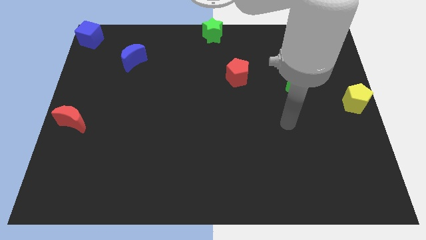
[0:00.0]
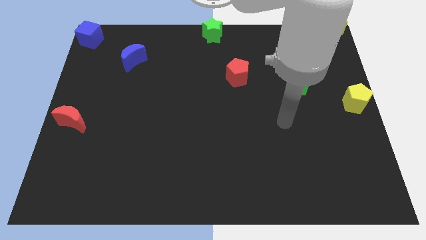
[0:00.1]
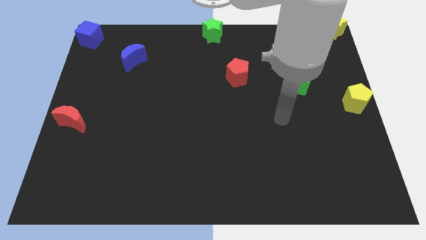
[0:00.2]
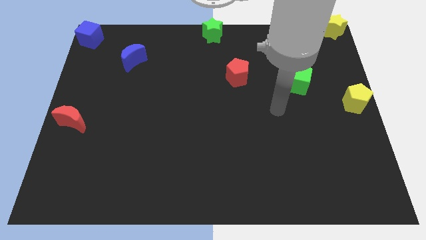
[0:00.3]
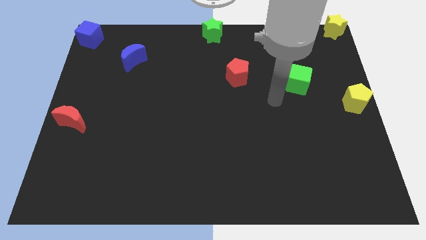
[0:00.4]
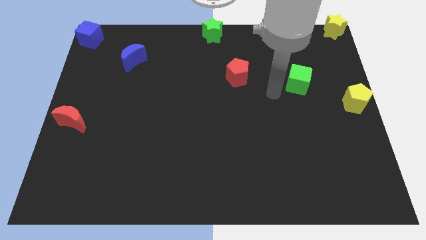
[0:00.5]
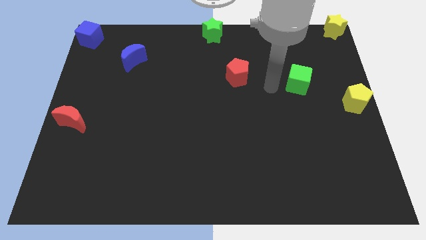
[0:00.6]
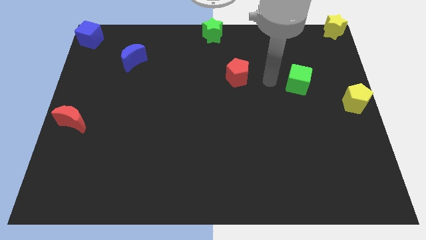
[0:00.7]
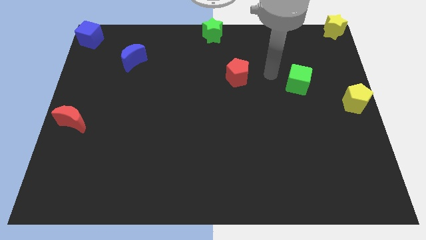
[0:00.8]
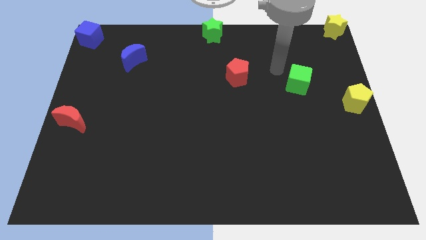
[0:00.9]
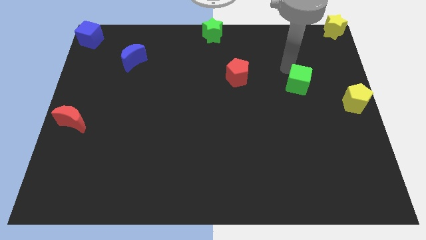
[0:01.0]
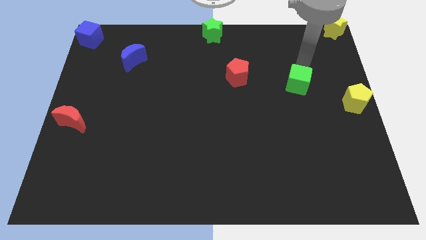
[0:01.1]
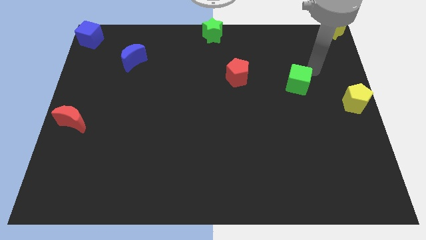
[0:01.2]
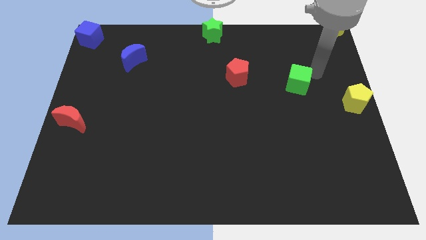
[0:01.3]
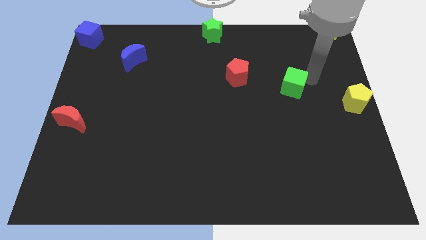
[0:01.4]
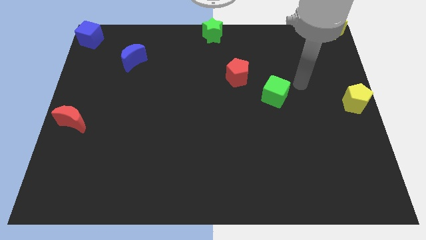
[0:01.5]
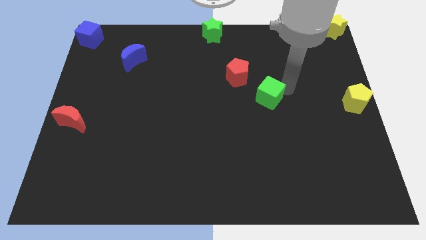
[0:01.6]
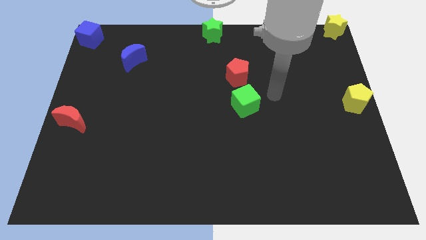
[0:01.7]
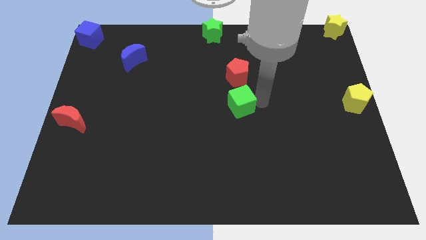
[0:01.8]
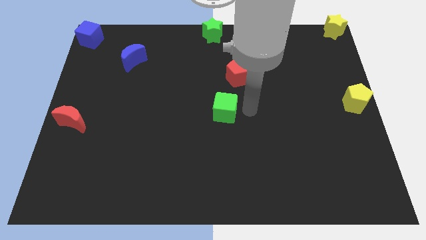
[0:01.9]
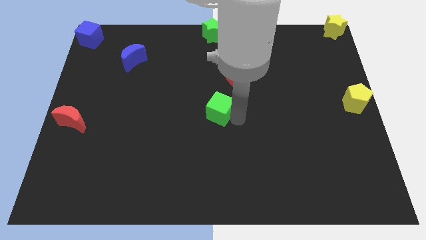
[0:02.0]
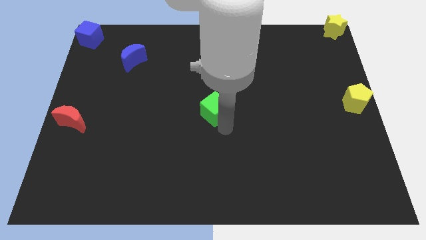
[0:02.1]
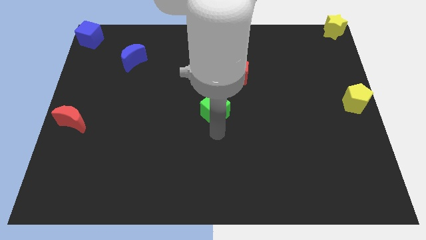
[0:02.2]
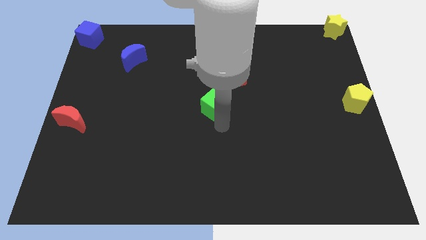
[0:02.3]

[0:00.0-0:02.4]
move the green star to the center of the board

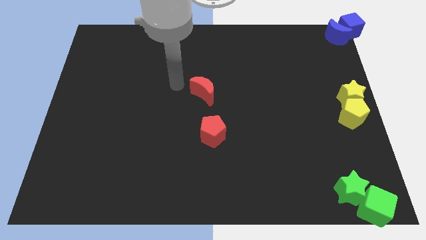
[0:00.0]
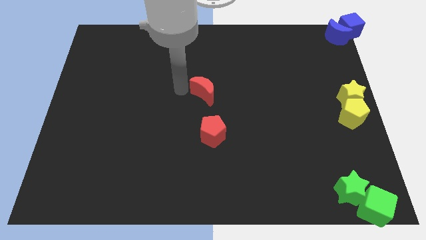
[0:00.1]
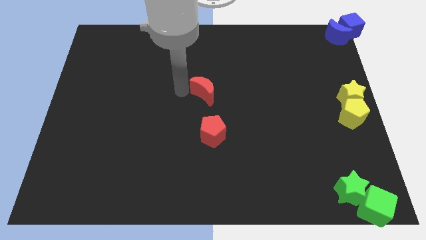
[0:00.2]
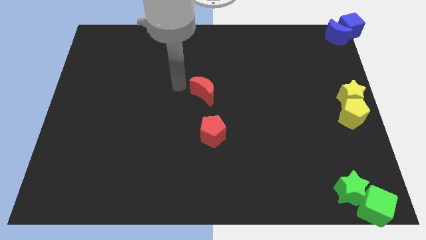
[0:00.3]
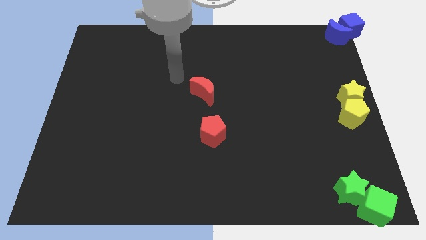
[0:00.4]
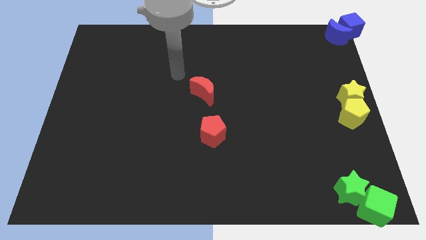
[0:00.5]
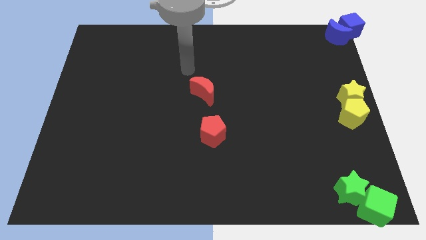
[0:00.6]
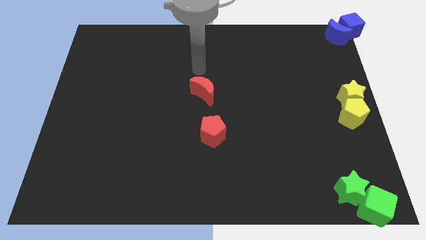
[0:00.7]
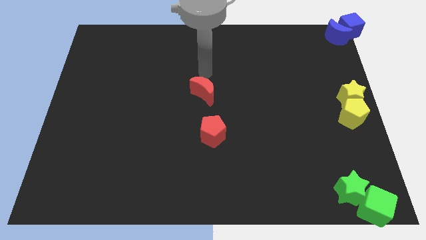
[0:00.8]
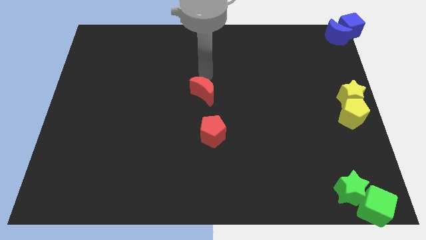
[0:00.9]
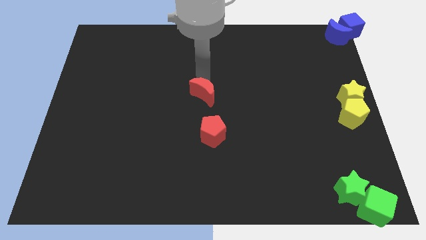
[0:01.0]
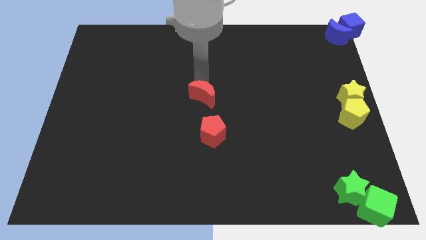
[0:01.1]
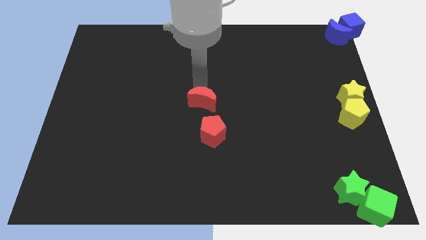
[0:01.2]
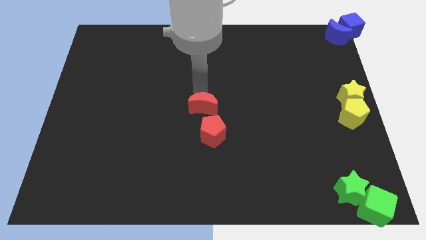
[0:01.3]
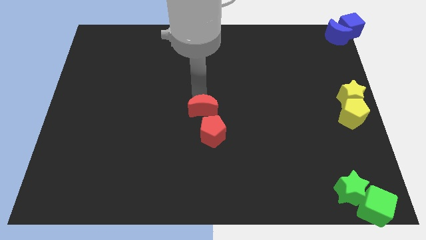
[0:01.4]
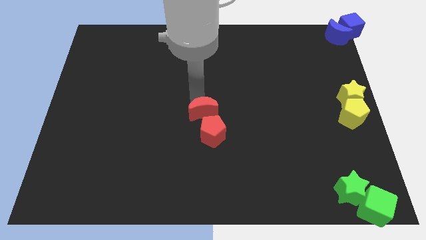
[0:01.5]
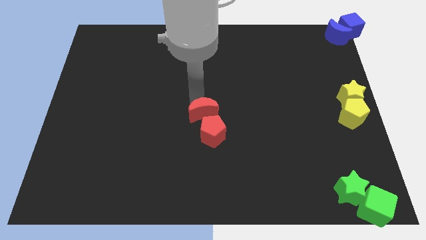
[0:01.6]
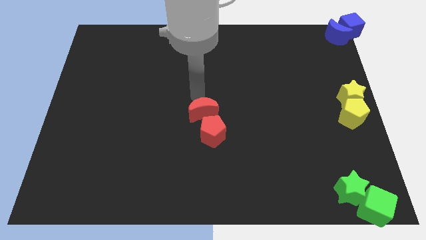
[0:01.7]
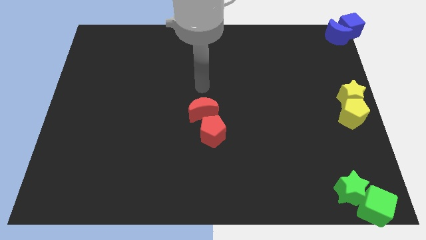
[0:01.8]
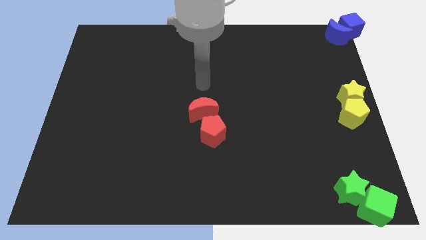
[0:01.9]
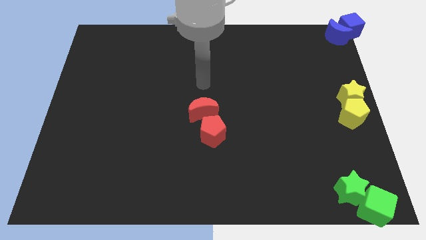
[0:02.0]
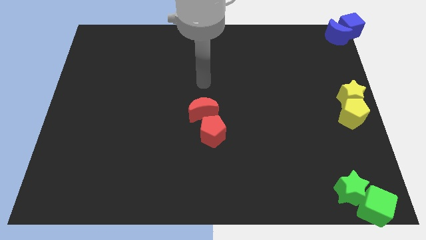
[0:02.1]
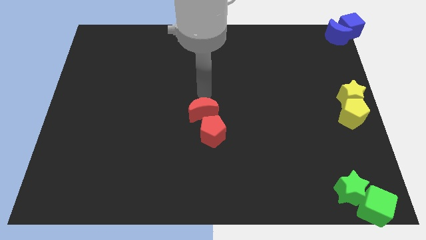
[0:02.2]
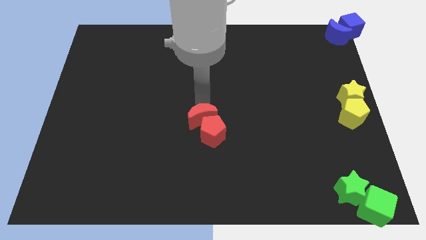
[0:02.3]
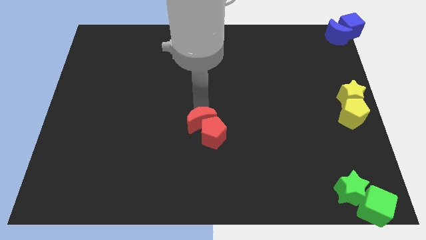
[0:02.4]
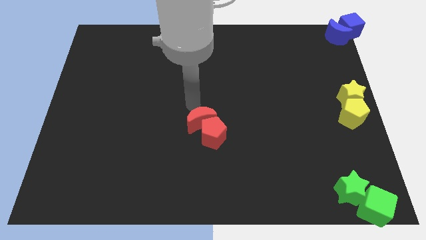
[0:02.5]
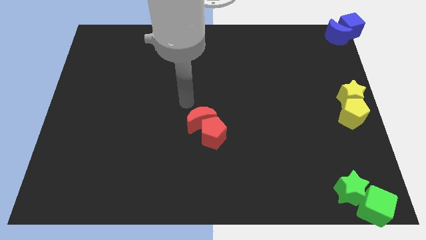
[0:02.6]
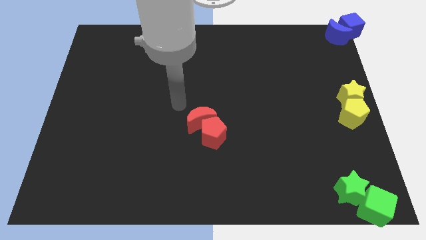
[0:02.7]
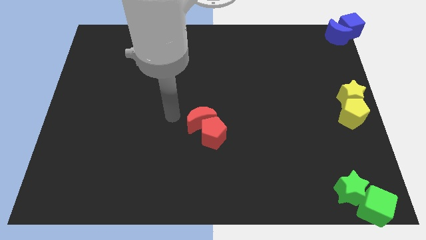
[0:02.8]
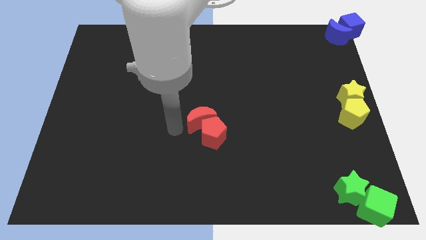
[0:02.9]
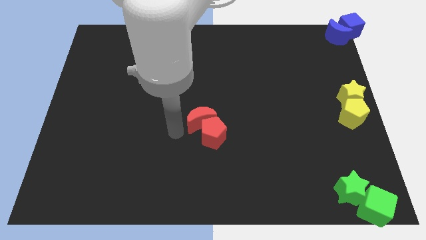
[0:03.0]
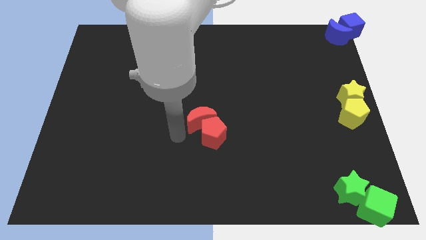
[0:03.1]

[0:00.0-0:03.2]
move the red crescent to the top left of the red pentagon

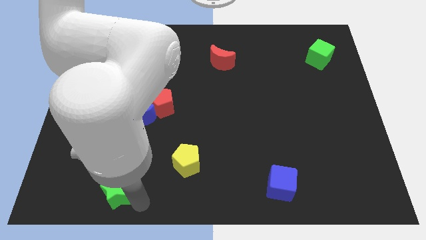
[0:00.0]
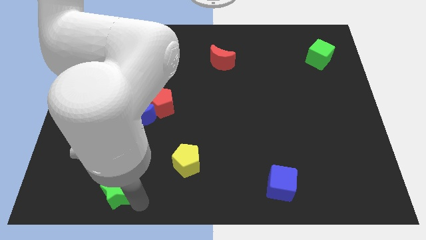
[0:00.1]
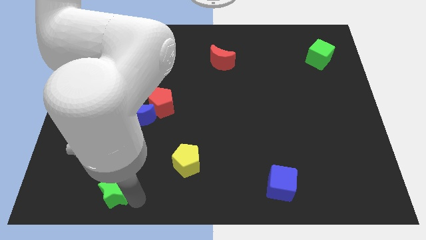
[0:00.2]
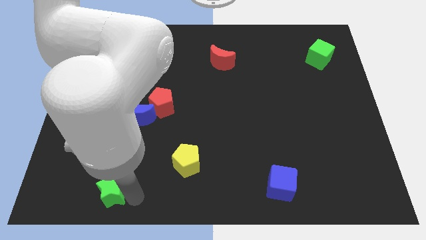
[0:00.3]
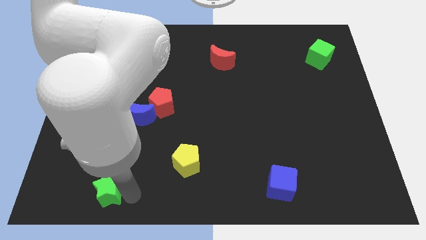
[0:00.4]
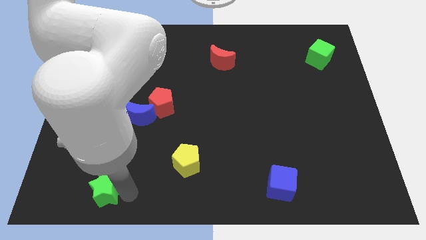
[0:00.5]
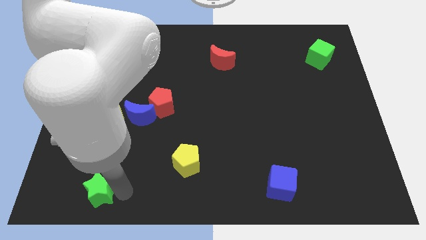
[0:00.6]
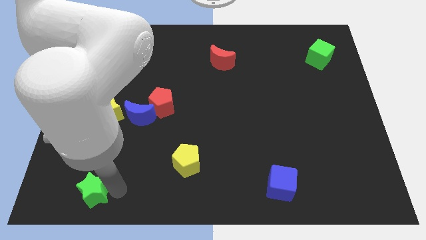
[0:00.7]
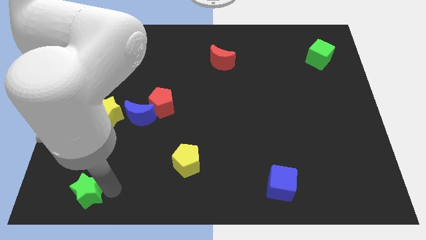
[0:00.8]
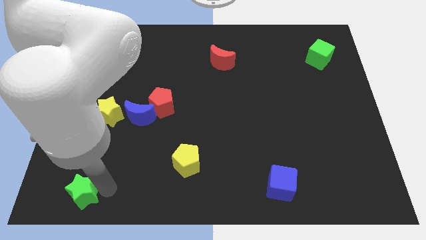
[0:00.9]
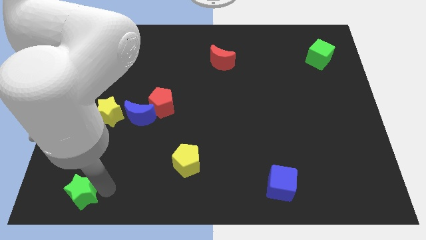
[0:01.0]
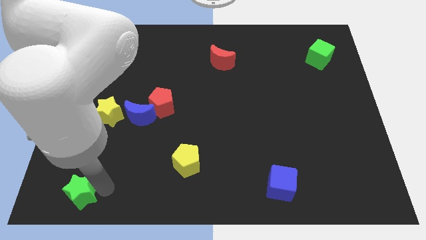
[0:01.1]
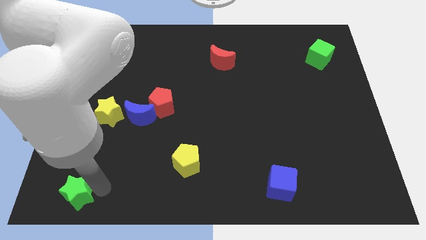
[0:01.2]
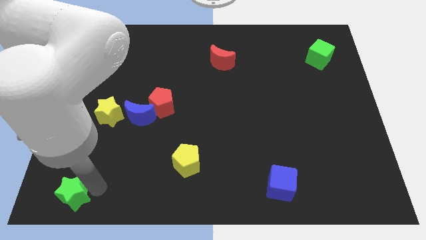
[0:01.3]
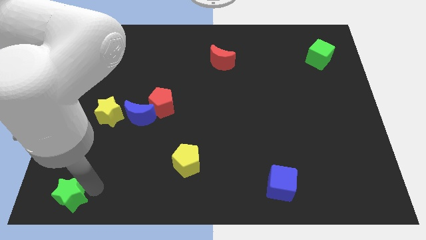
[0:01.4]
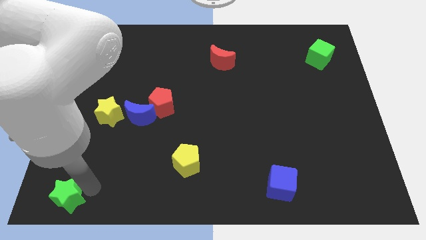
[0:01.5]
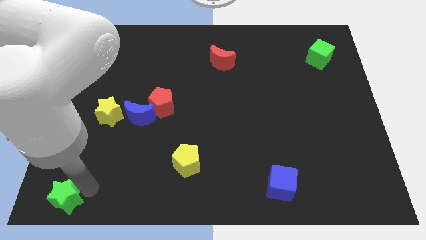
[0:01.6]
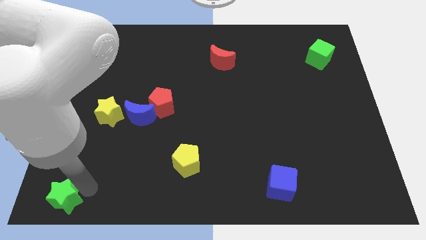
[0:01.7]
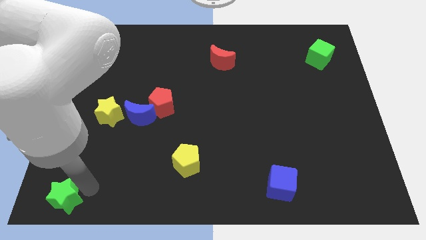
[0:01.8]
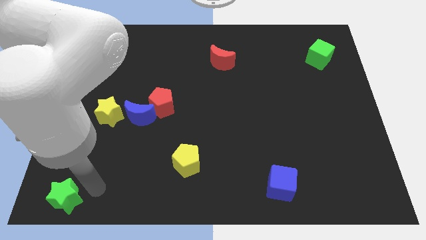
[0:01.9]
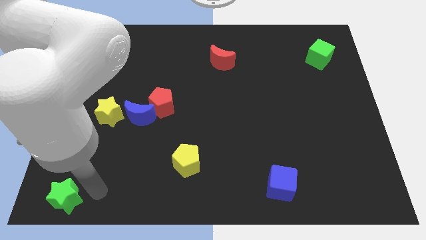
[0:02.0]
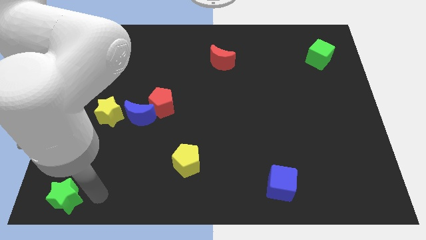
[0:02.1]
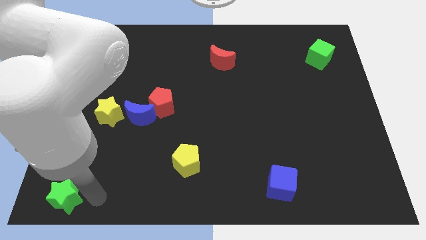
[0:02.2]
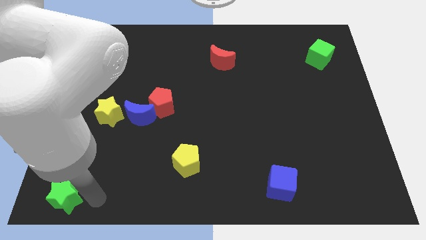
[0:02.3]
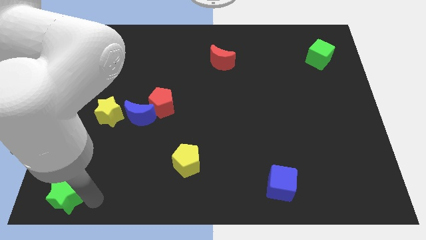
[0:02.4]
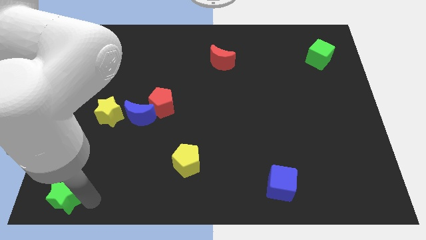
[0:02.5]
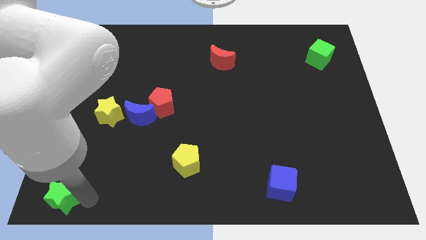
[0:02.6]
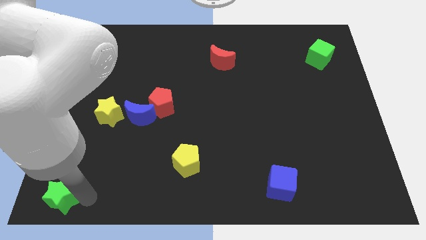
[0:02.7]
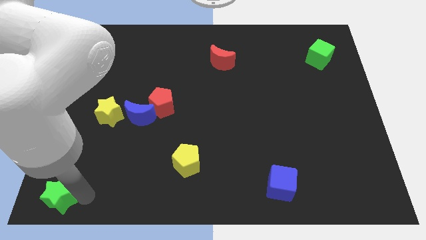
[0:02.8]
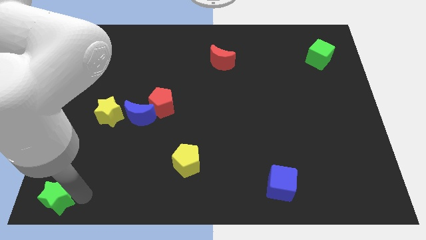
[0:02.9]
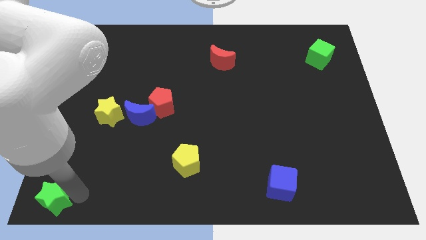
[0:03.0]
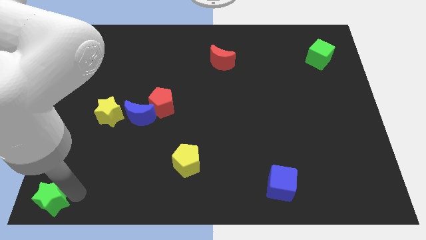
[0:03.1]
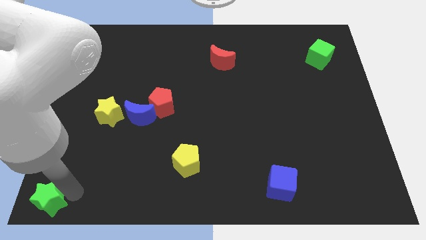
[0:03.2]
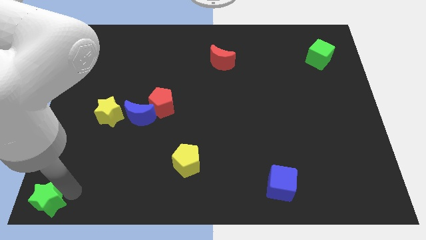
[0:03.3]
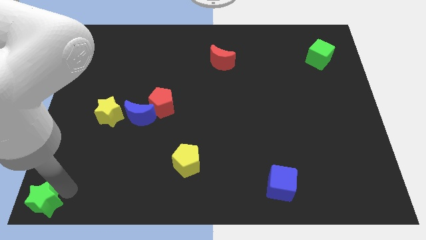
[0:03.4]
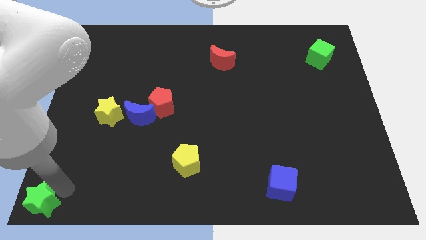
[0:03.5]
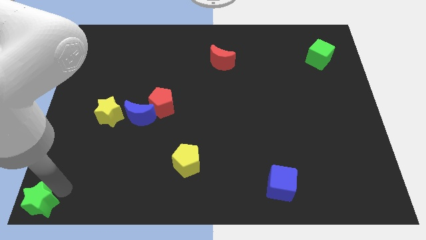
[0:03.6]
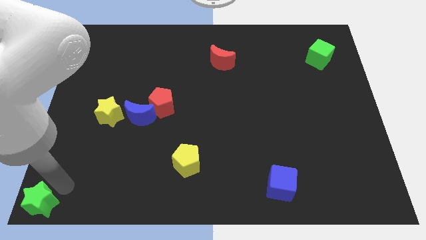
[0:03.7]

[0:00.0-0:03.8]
move the green star towards the bottom left corner of the board
